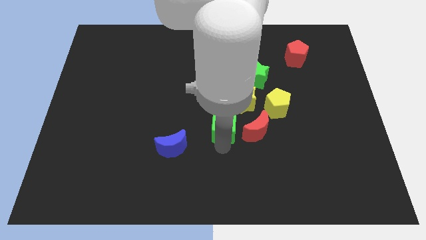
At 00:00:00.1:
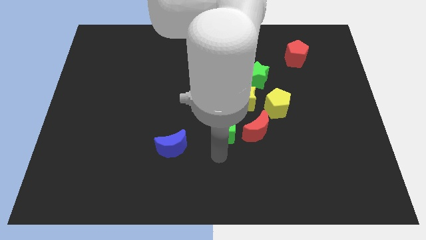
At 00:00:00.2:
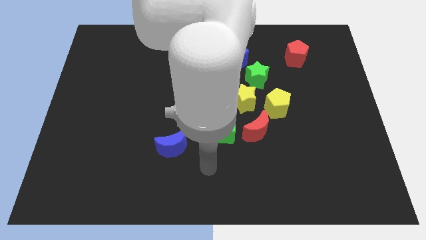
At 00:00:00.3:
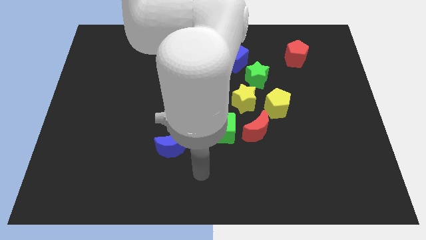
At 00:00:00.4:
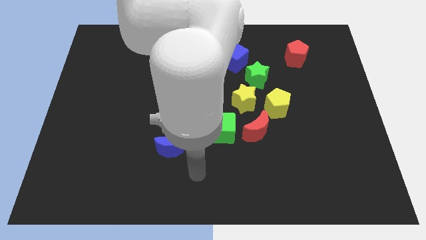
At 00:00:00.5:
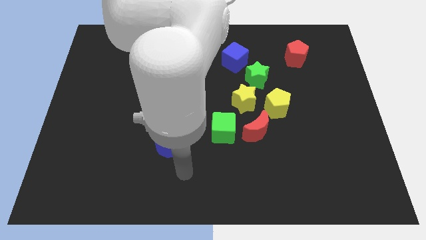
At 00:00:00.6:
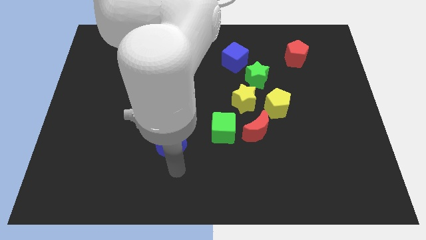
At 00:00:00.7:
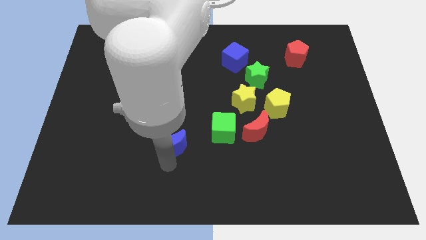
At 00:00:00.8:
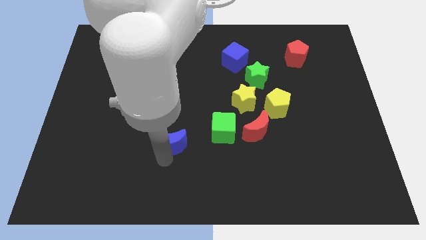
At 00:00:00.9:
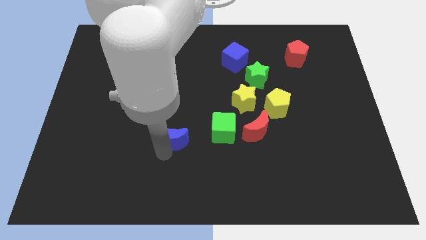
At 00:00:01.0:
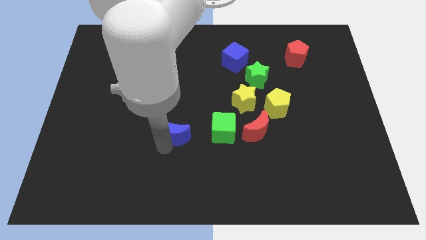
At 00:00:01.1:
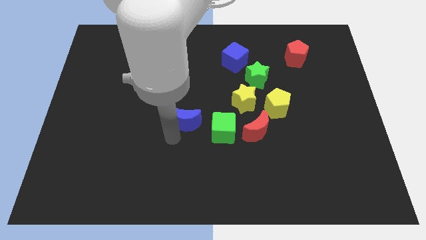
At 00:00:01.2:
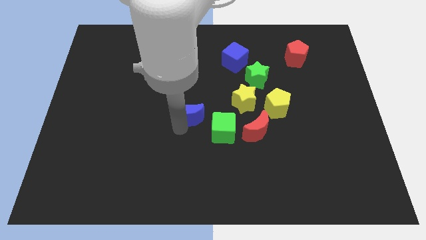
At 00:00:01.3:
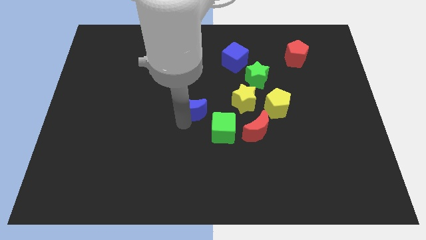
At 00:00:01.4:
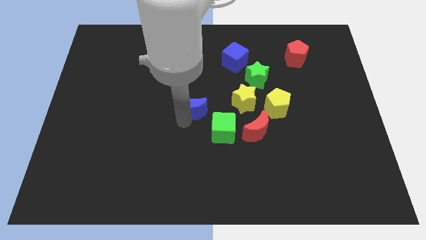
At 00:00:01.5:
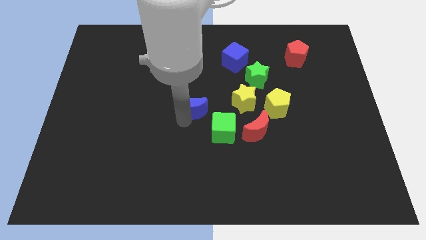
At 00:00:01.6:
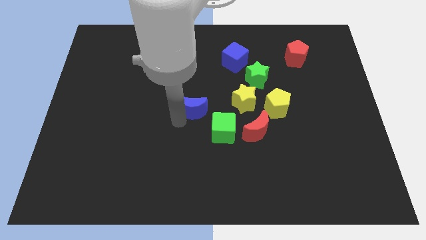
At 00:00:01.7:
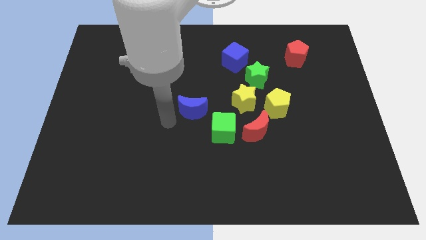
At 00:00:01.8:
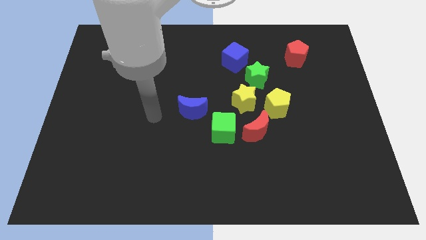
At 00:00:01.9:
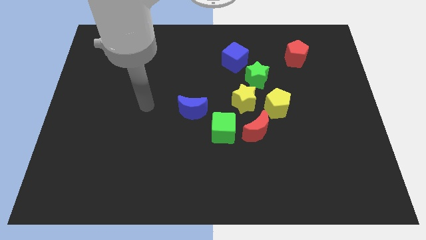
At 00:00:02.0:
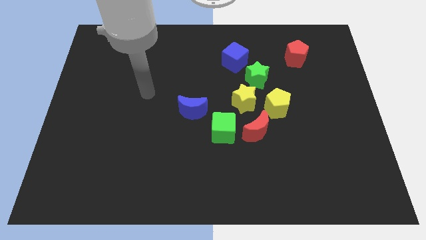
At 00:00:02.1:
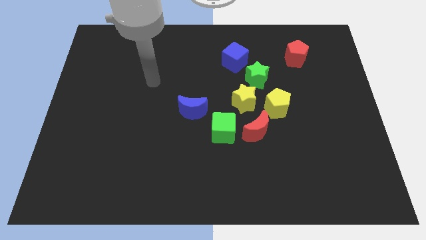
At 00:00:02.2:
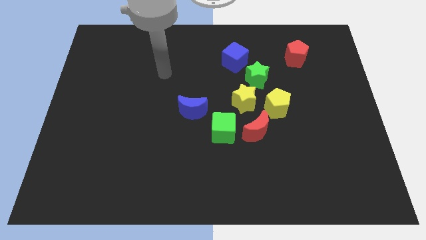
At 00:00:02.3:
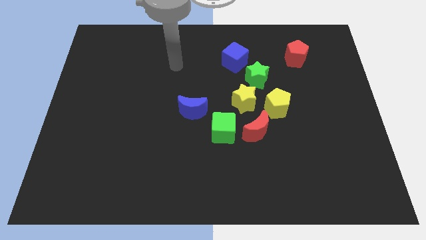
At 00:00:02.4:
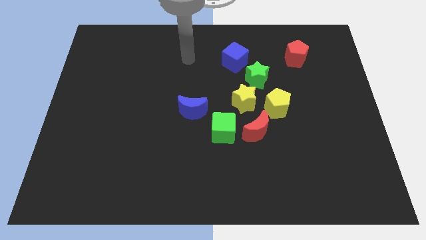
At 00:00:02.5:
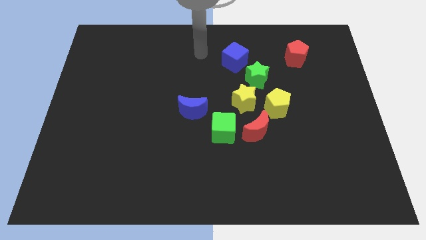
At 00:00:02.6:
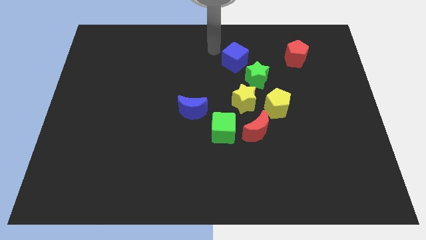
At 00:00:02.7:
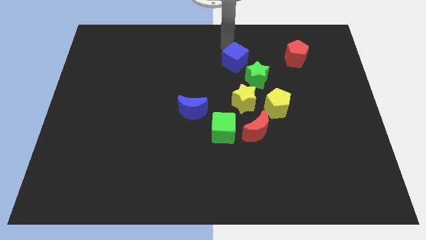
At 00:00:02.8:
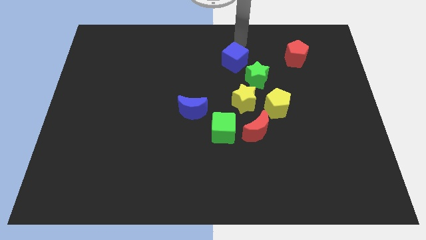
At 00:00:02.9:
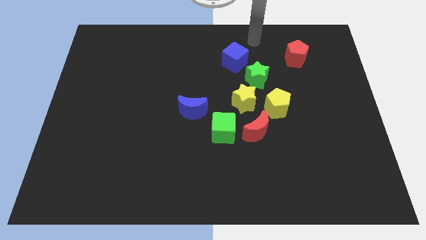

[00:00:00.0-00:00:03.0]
place the blue moon at the center of the board

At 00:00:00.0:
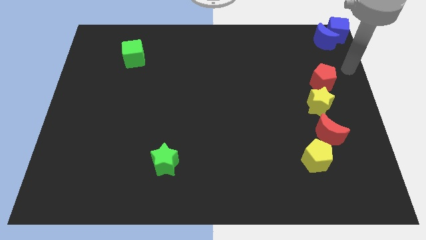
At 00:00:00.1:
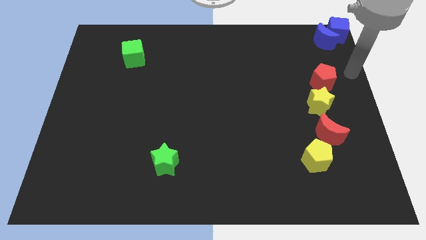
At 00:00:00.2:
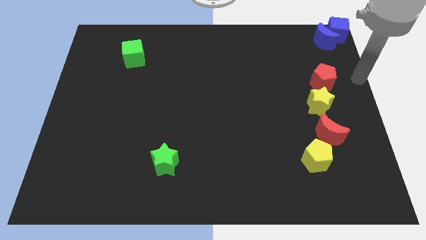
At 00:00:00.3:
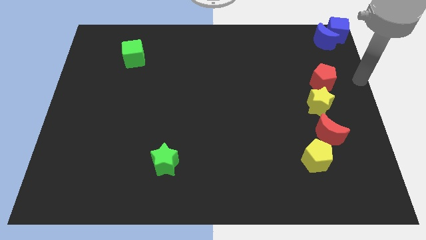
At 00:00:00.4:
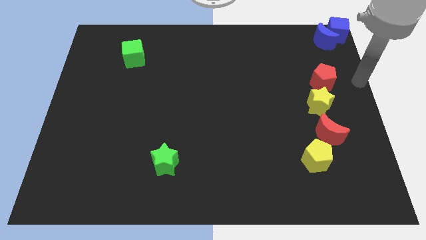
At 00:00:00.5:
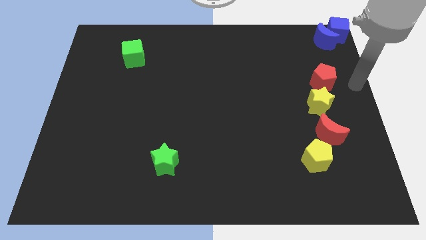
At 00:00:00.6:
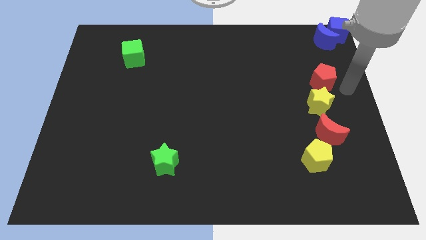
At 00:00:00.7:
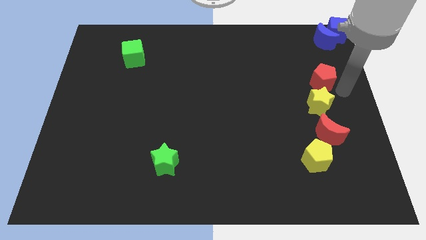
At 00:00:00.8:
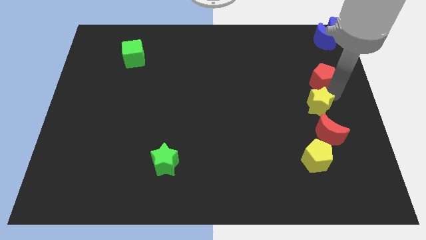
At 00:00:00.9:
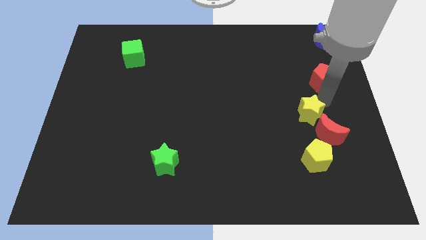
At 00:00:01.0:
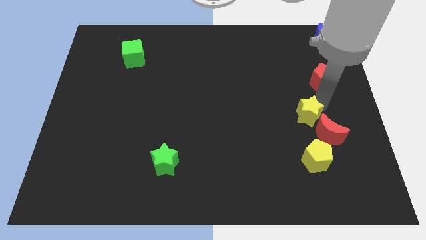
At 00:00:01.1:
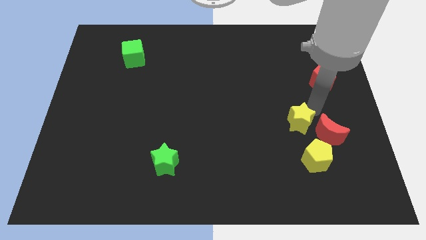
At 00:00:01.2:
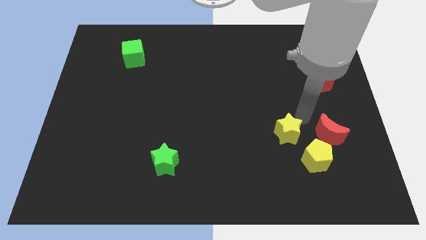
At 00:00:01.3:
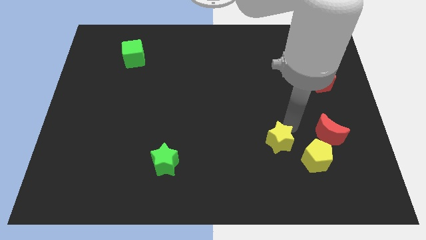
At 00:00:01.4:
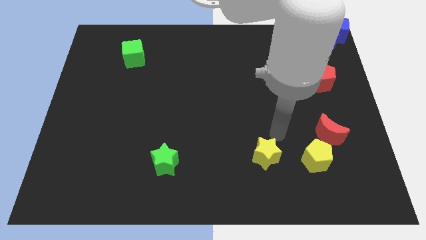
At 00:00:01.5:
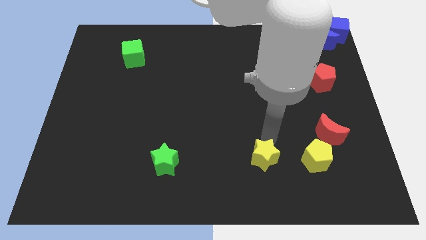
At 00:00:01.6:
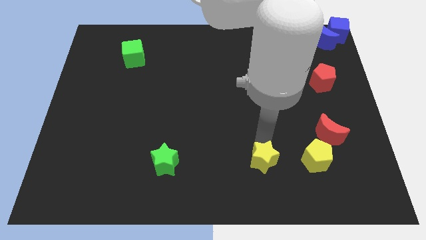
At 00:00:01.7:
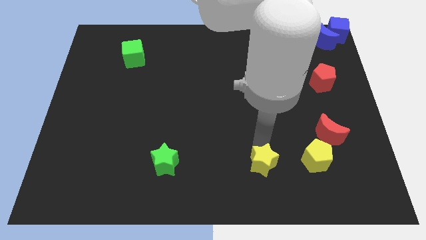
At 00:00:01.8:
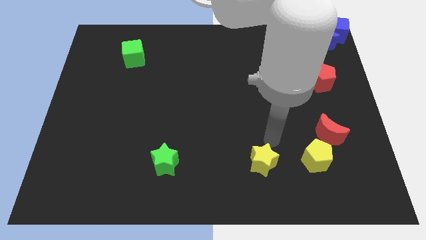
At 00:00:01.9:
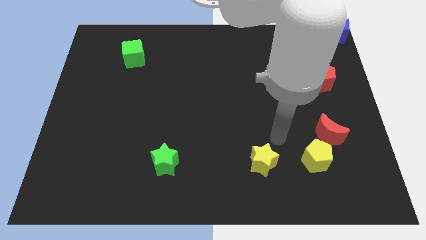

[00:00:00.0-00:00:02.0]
place the yellow star in between green star and yellow pentagon

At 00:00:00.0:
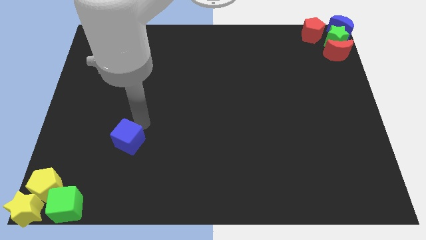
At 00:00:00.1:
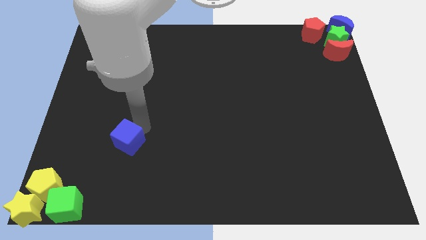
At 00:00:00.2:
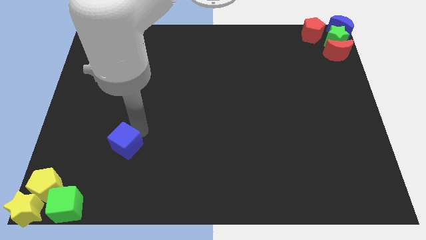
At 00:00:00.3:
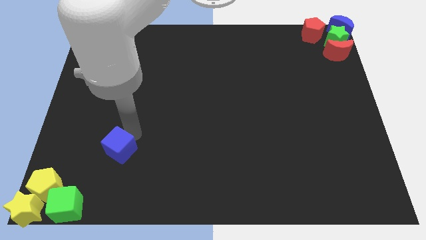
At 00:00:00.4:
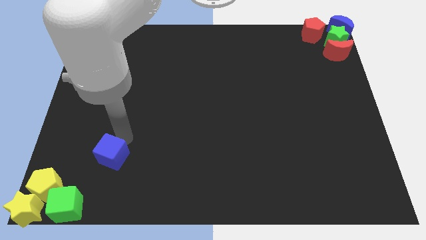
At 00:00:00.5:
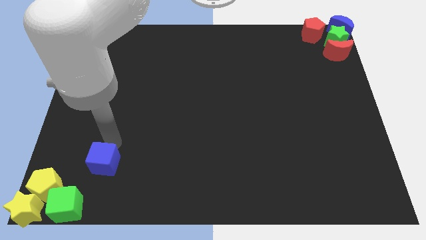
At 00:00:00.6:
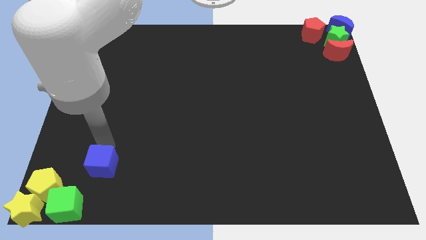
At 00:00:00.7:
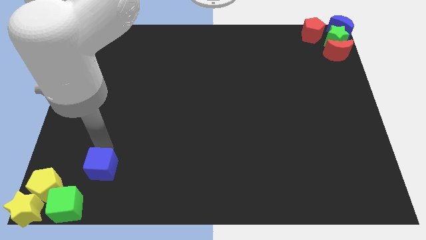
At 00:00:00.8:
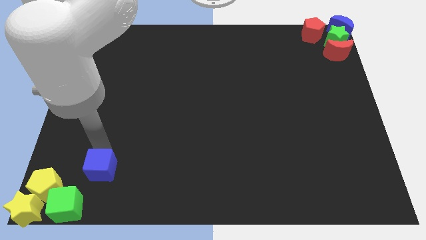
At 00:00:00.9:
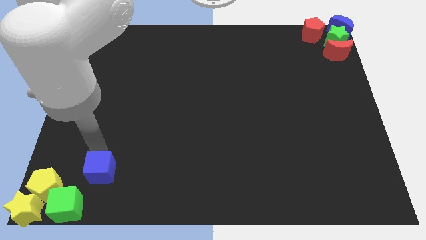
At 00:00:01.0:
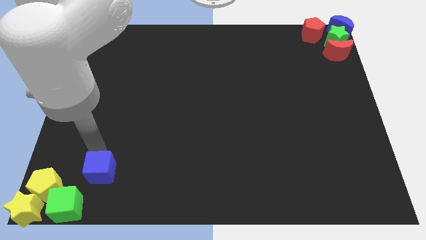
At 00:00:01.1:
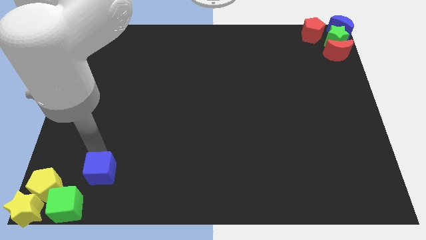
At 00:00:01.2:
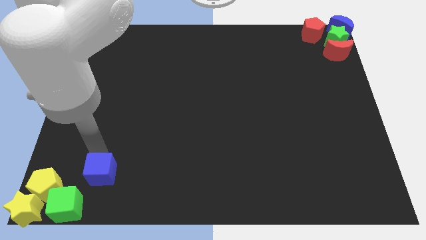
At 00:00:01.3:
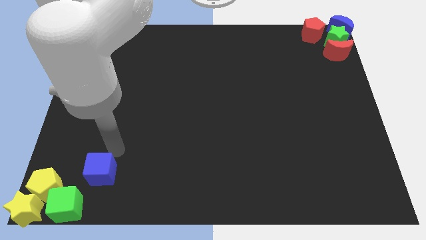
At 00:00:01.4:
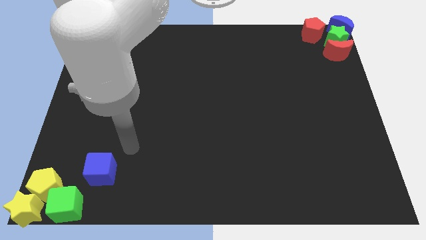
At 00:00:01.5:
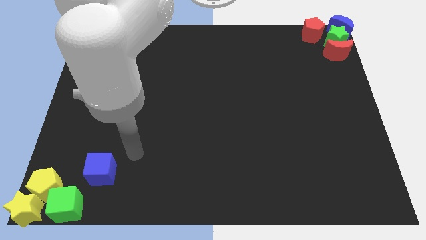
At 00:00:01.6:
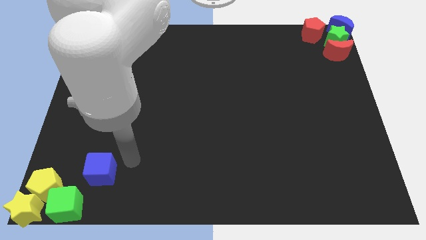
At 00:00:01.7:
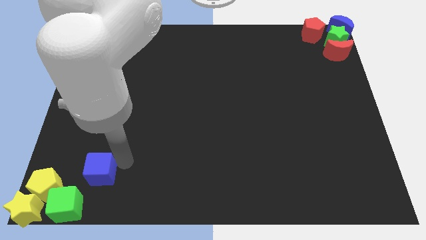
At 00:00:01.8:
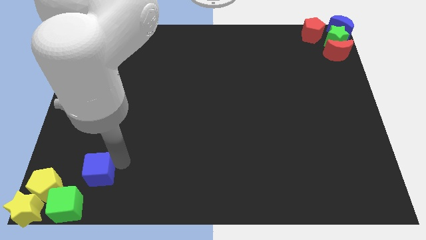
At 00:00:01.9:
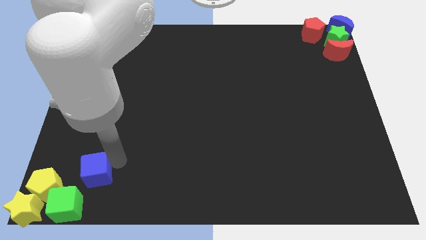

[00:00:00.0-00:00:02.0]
slide the blue cube towards the bottom left

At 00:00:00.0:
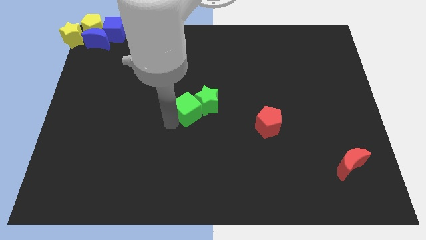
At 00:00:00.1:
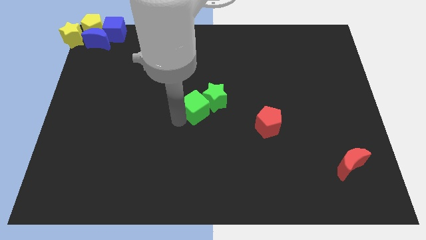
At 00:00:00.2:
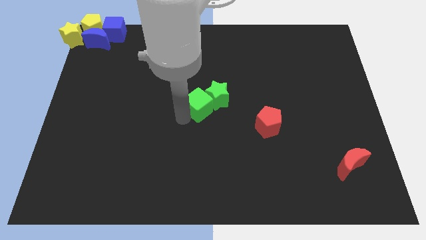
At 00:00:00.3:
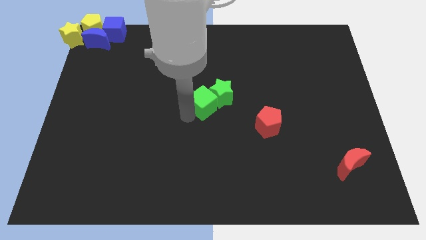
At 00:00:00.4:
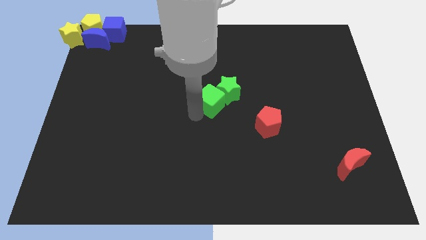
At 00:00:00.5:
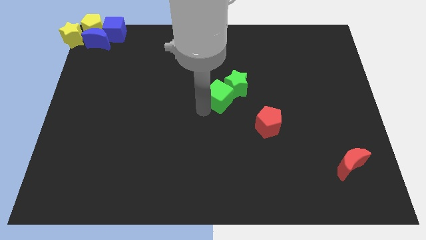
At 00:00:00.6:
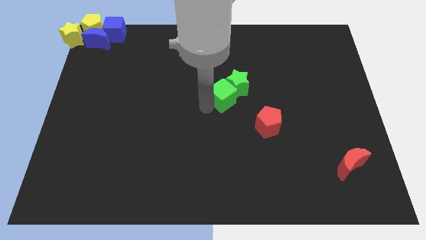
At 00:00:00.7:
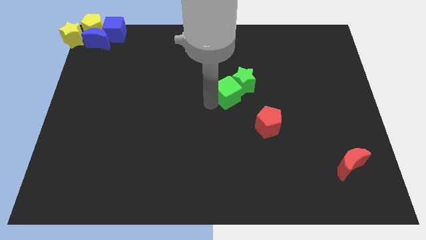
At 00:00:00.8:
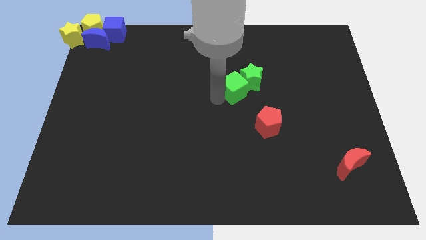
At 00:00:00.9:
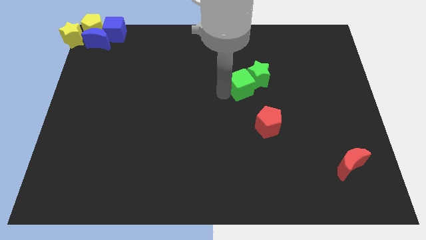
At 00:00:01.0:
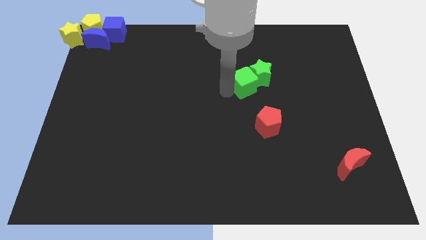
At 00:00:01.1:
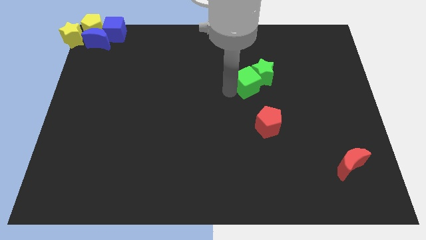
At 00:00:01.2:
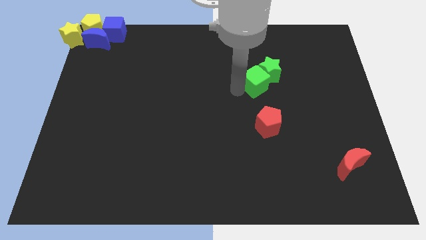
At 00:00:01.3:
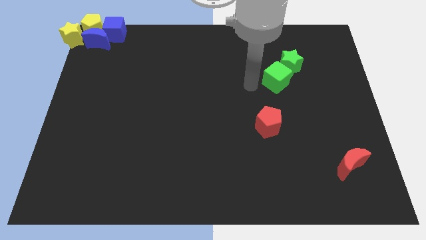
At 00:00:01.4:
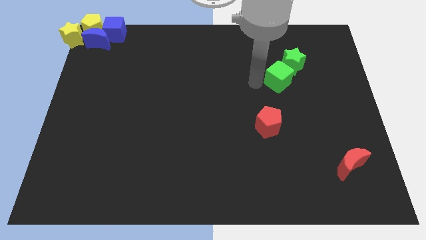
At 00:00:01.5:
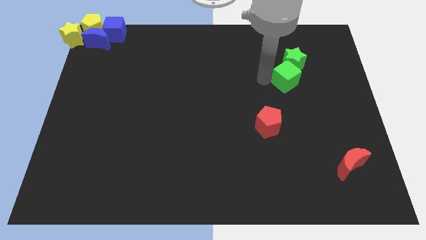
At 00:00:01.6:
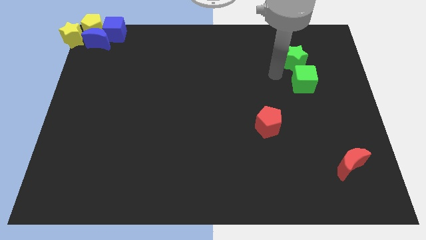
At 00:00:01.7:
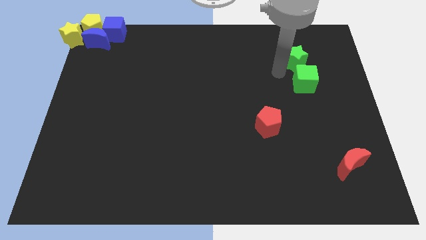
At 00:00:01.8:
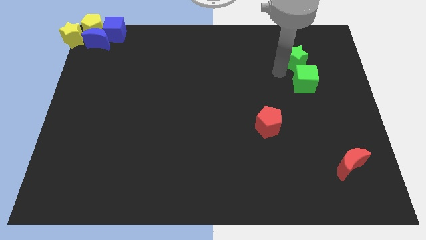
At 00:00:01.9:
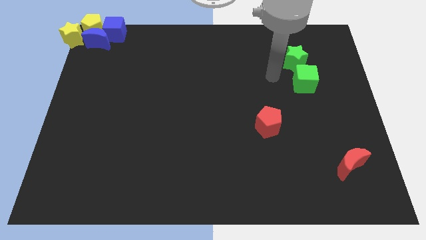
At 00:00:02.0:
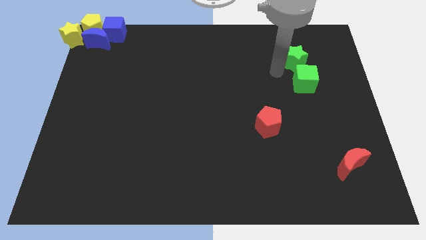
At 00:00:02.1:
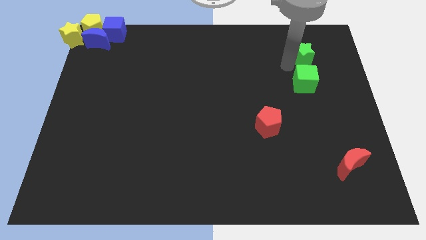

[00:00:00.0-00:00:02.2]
move the green cube and green star to the top right of the board
